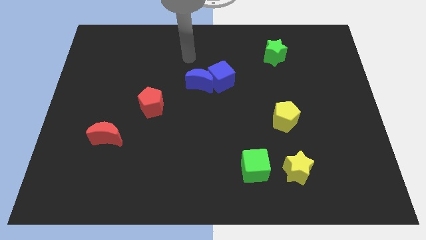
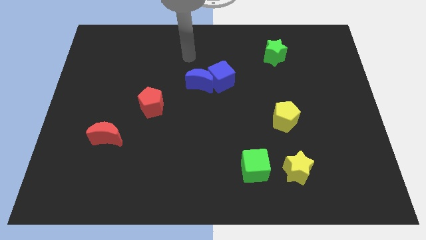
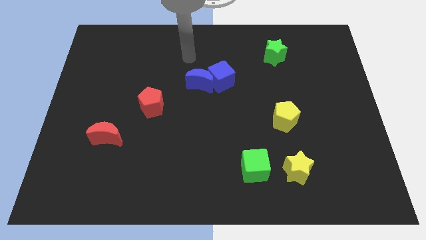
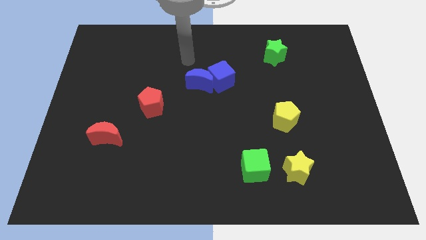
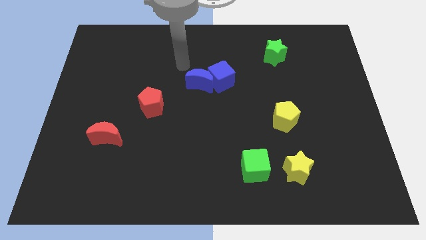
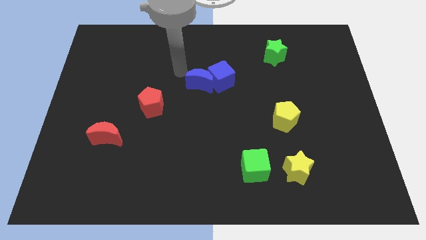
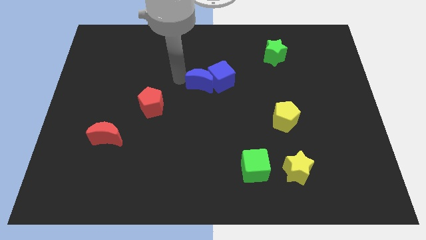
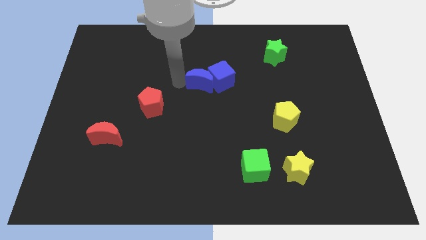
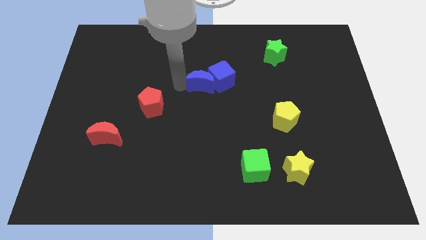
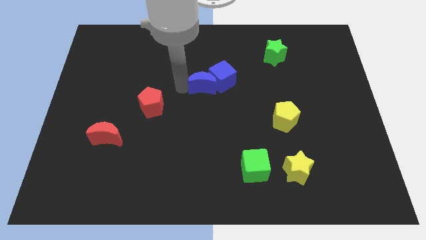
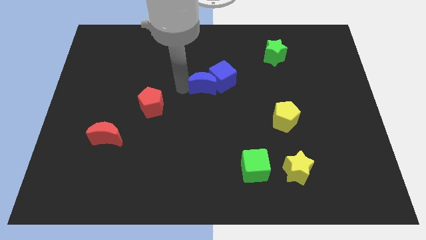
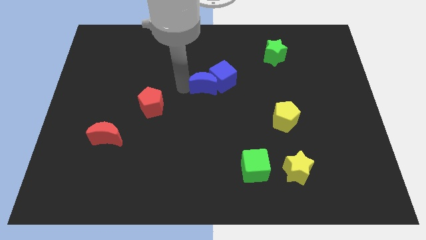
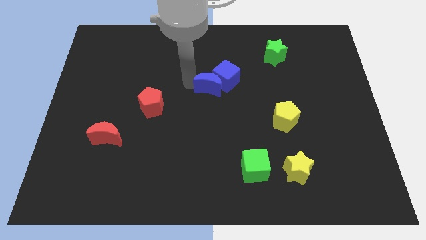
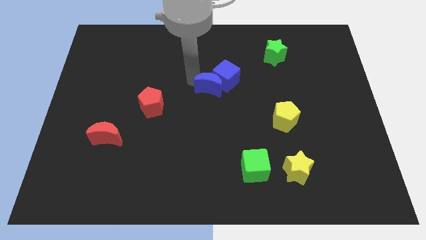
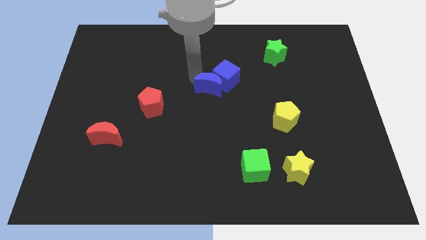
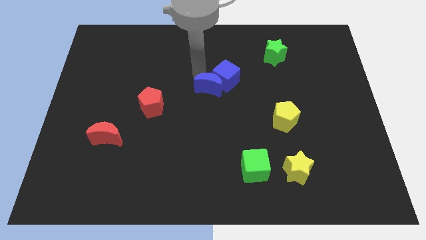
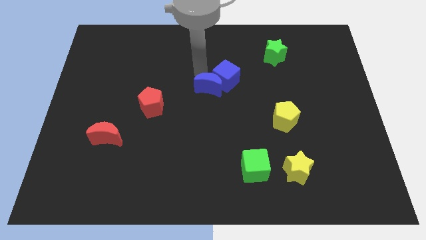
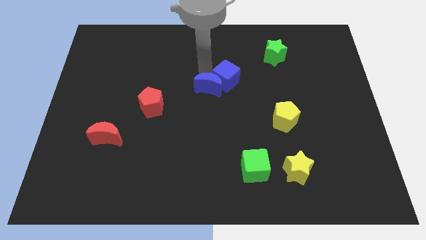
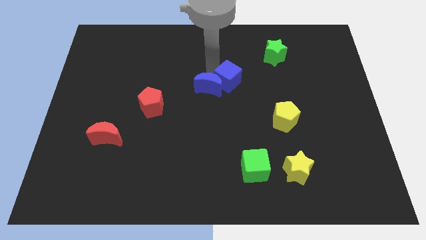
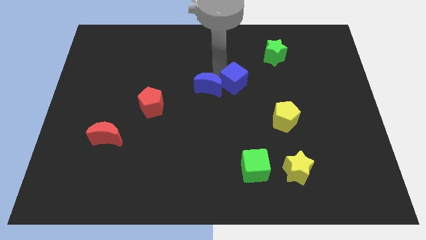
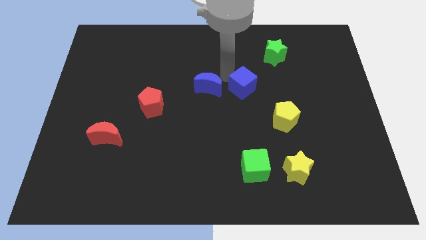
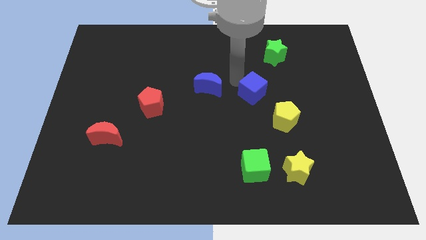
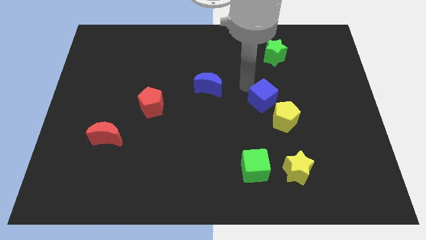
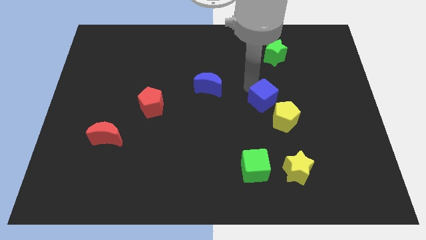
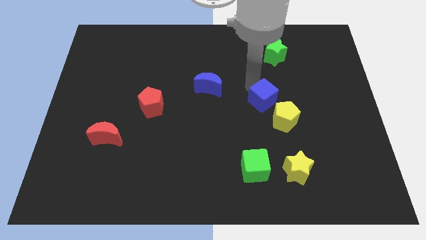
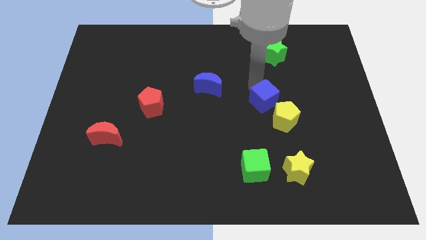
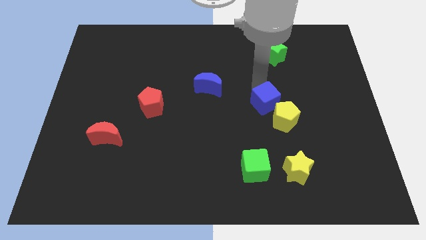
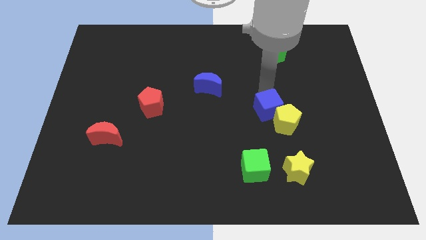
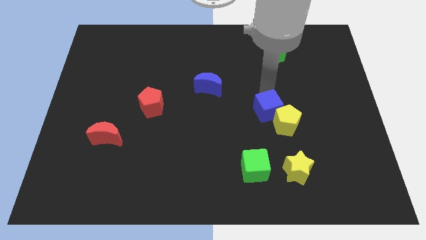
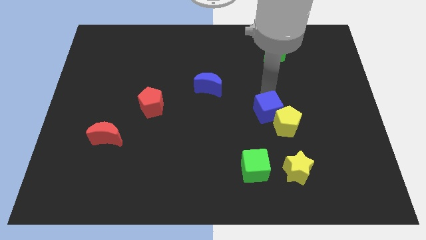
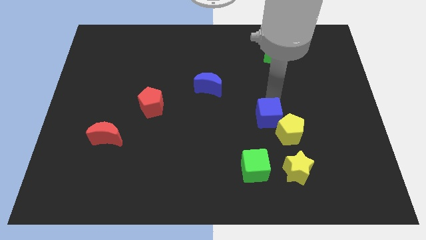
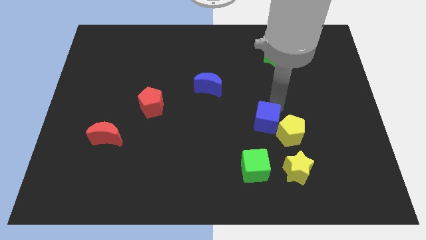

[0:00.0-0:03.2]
push the blue cube into the yellow pentagon

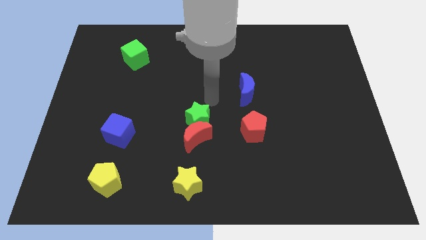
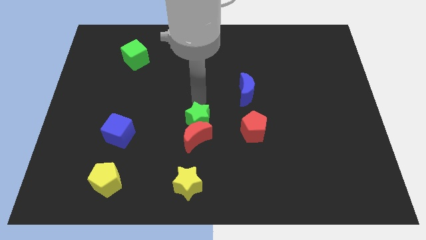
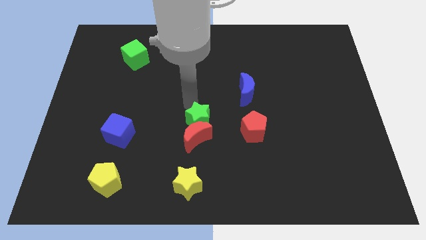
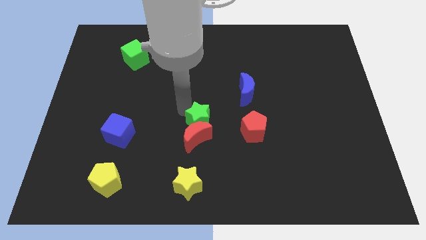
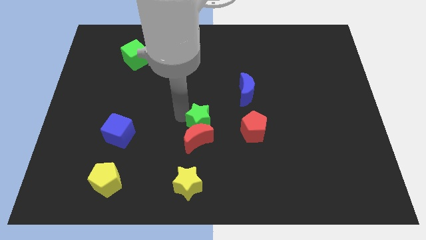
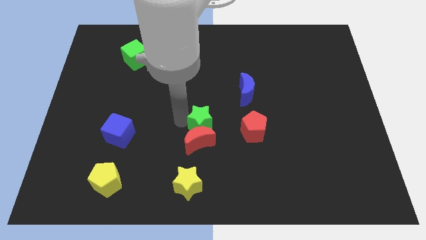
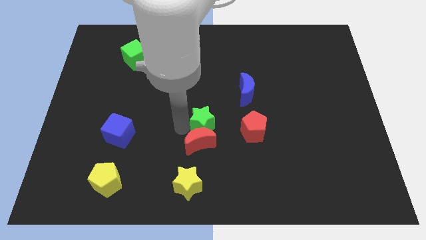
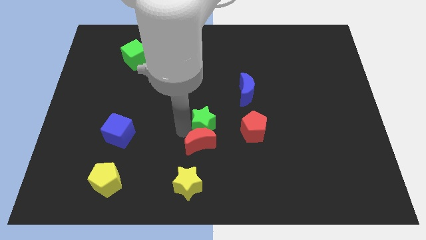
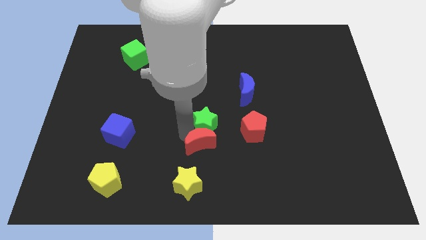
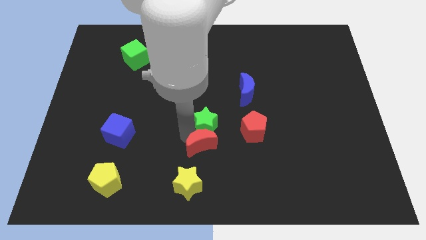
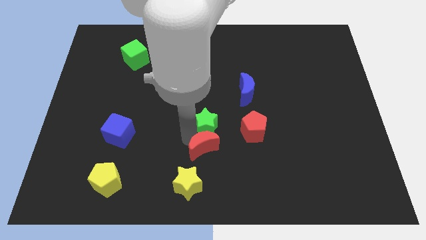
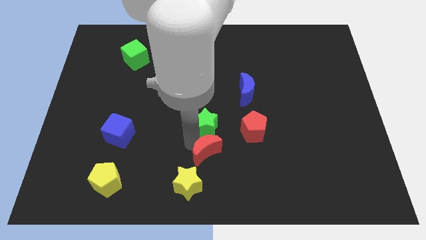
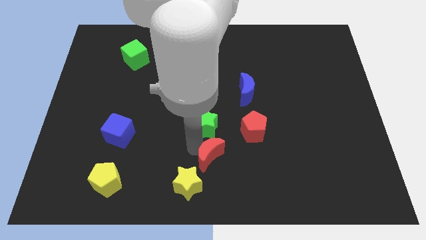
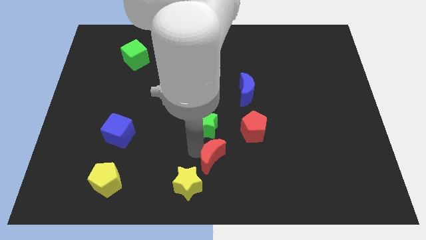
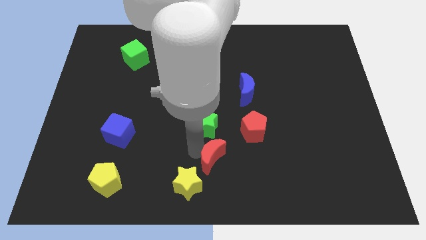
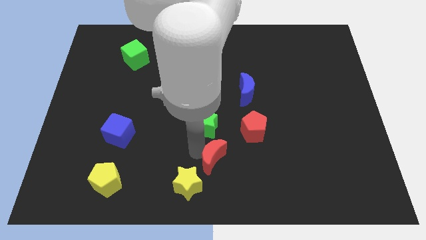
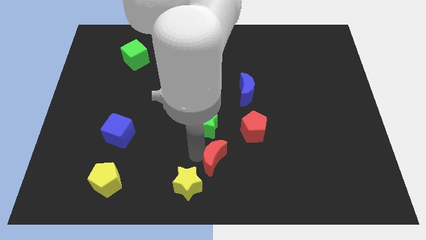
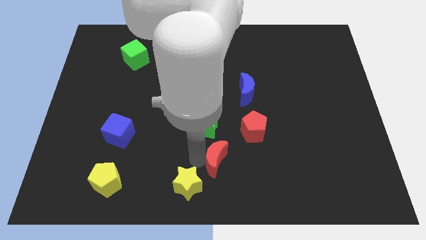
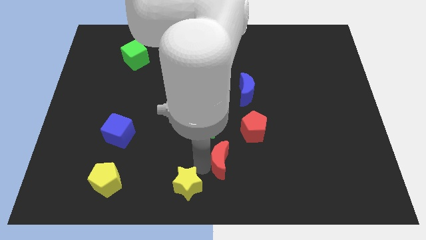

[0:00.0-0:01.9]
place the red moon between the red pentagon and yellow star

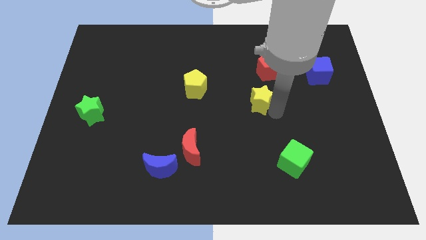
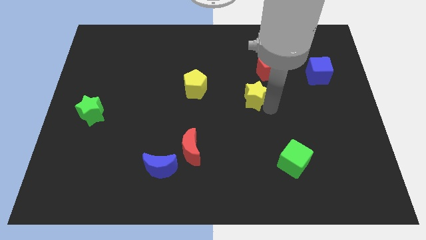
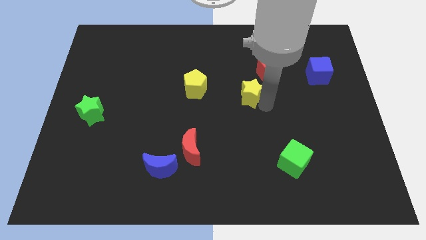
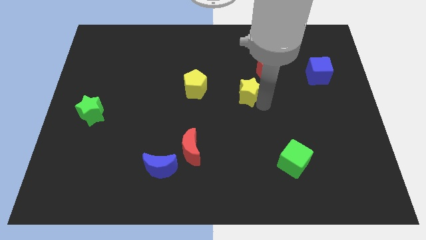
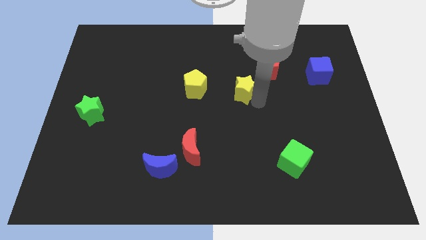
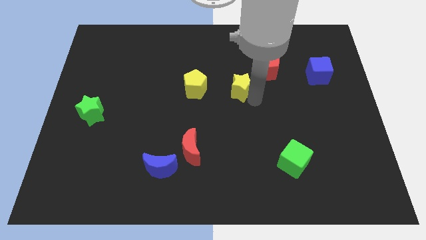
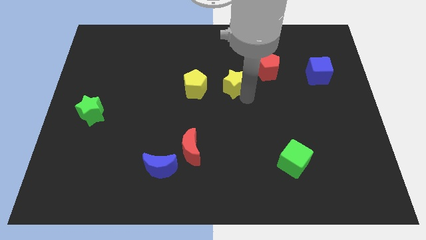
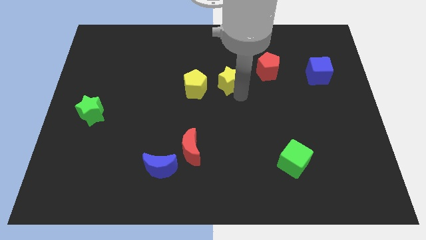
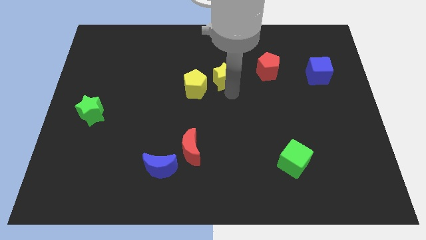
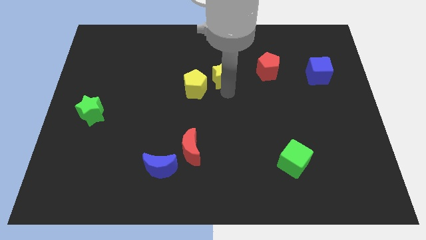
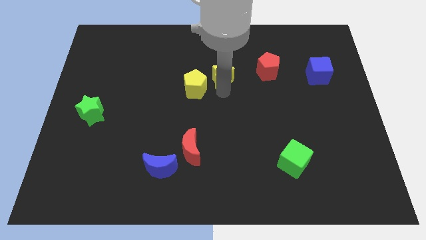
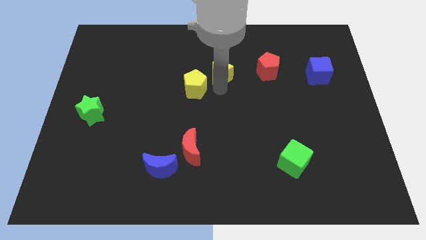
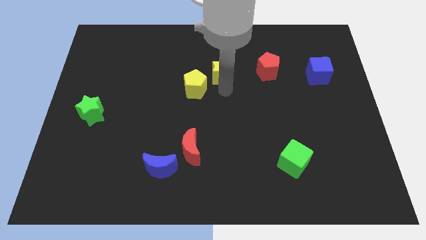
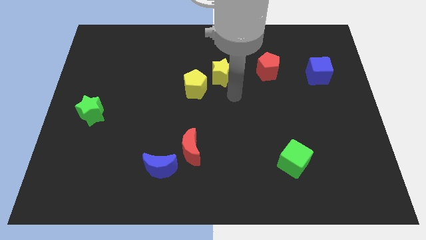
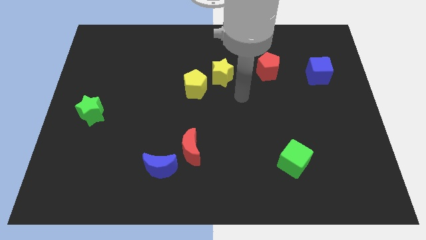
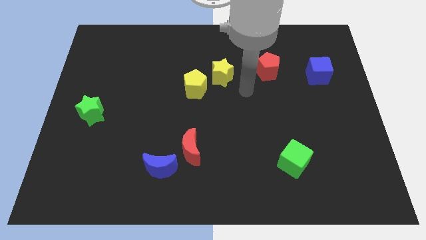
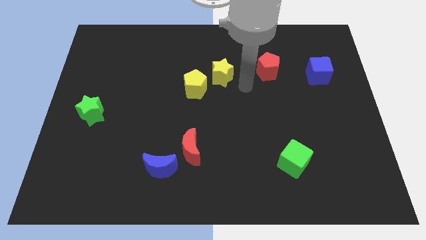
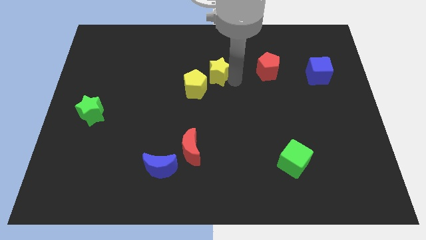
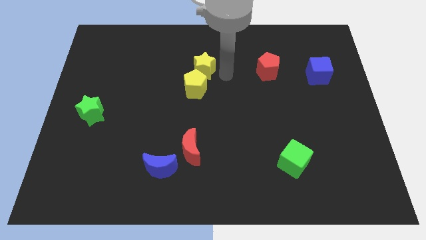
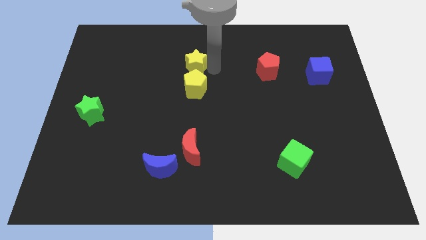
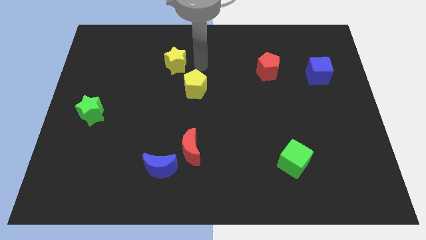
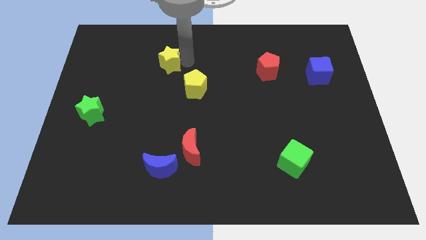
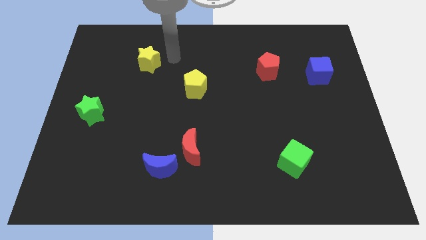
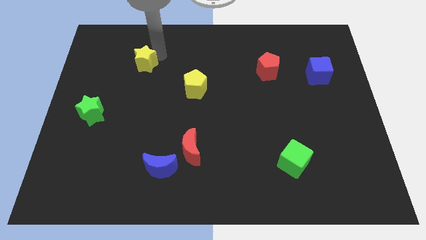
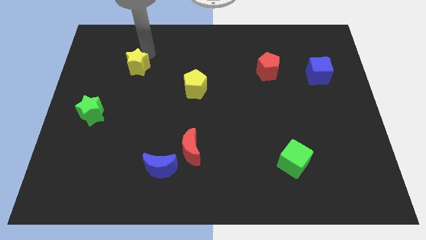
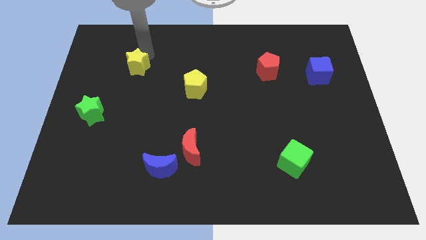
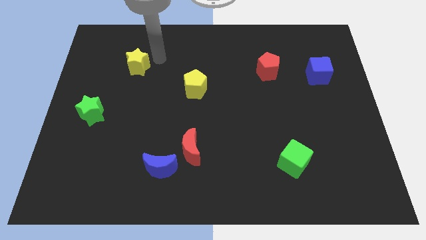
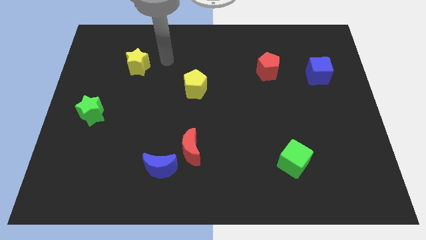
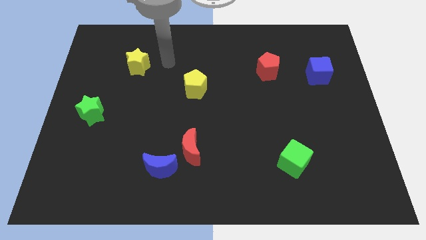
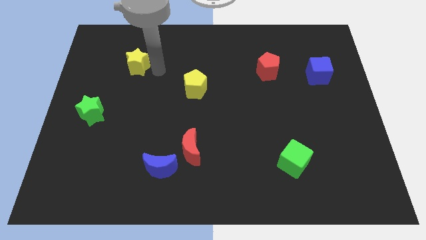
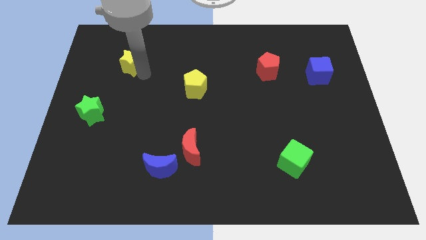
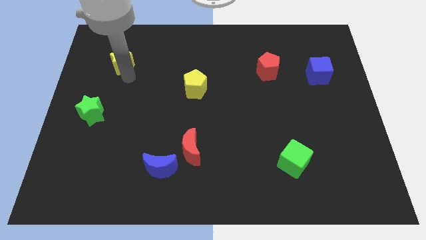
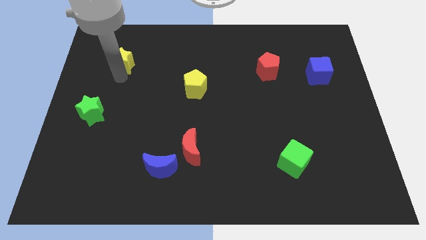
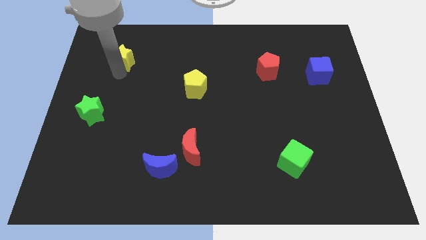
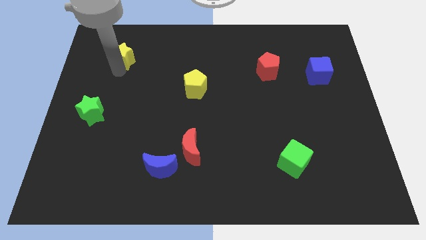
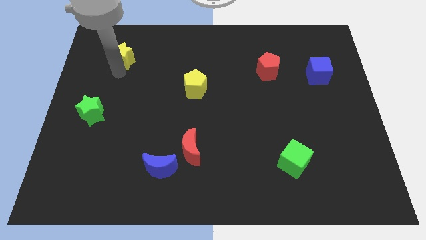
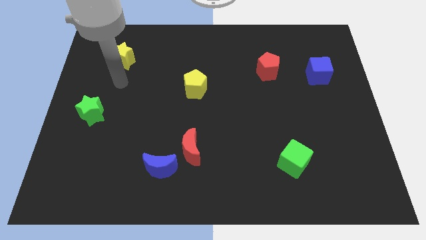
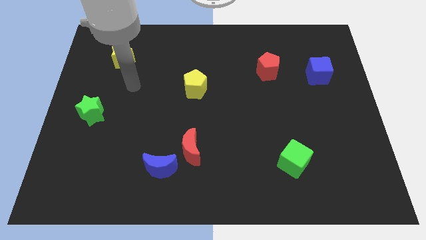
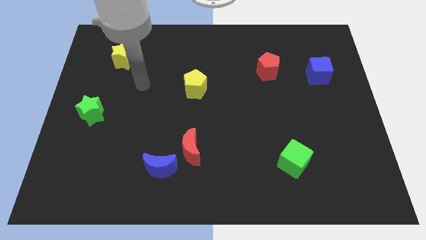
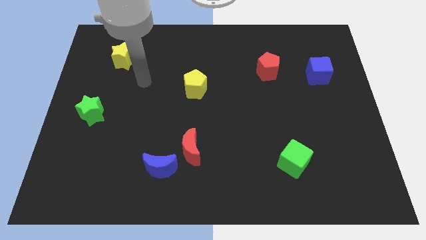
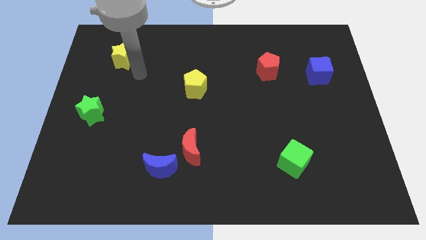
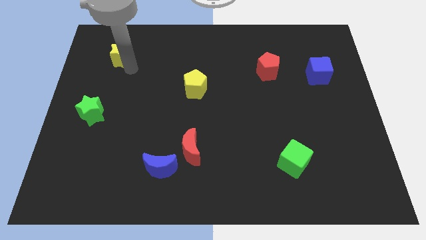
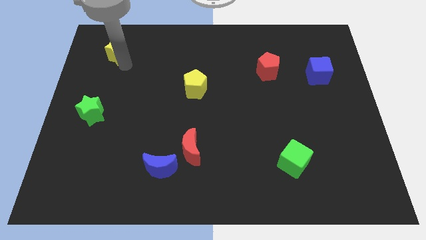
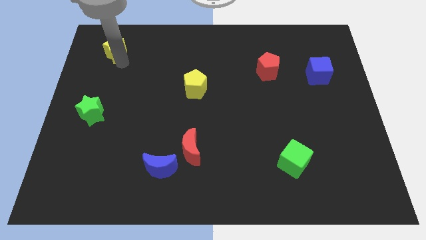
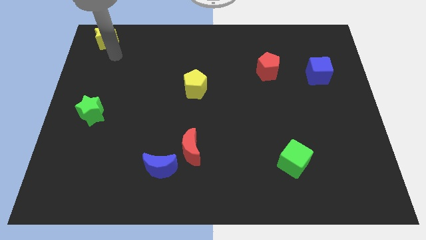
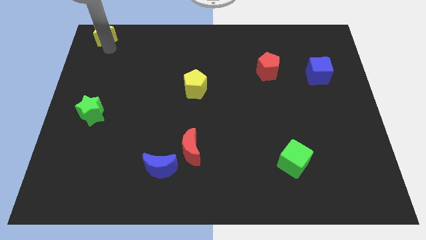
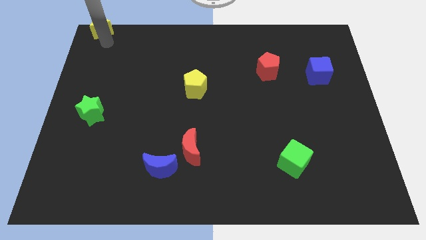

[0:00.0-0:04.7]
push the yellow star to the top left side of the board
